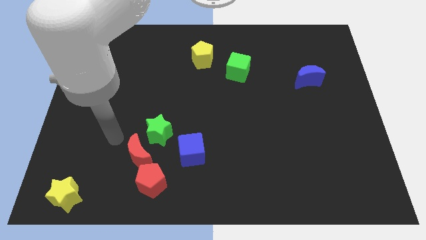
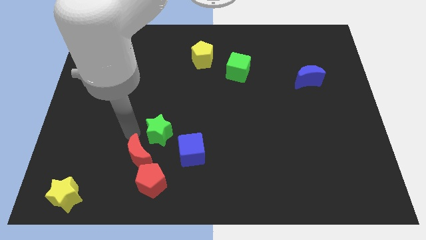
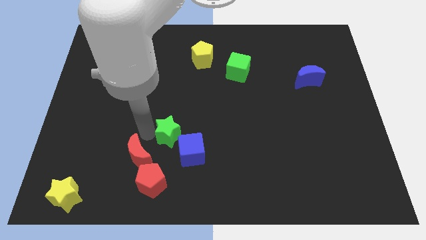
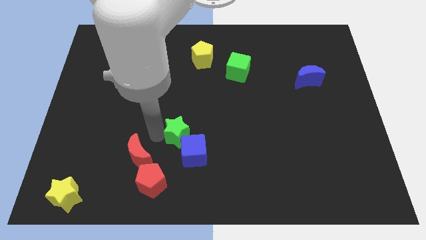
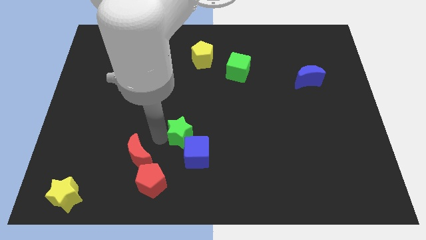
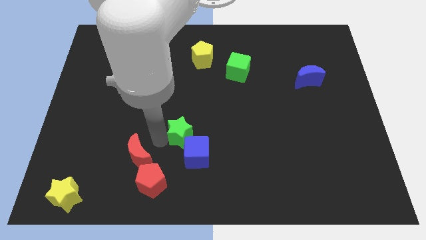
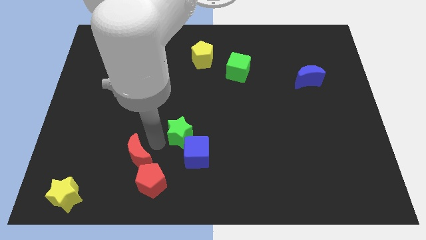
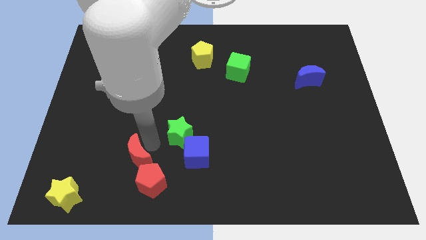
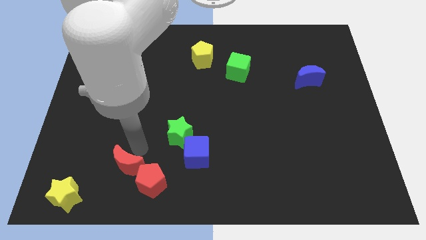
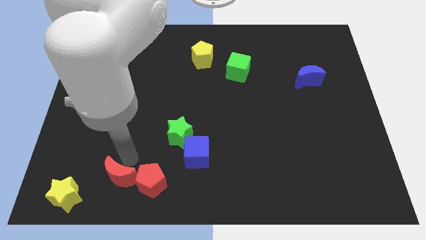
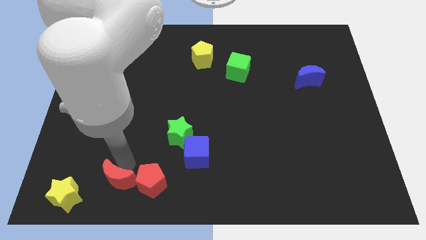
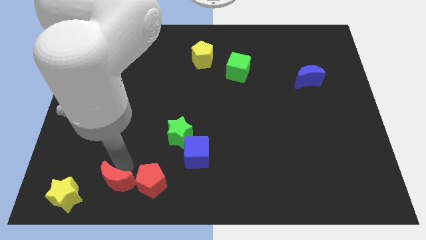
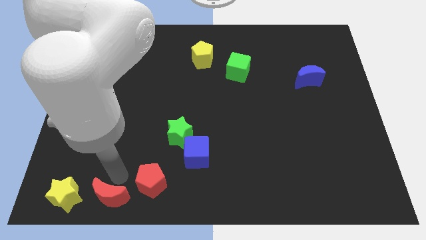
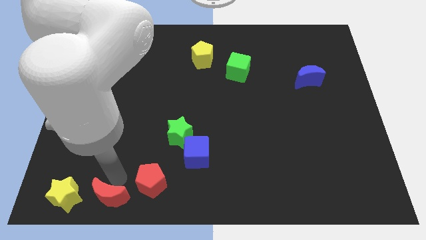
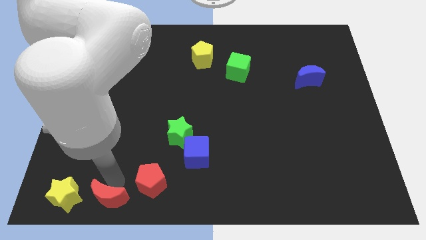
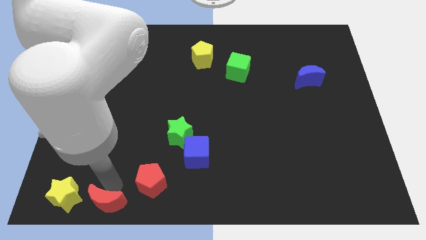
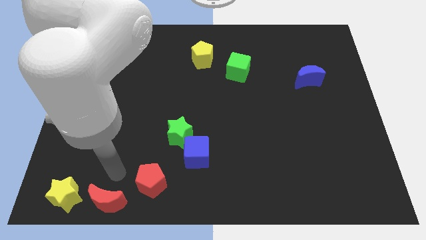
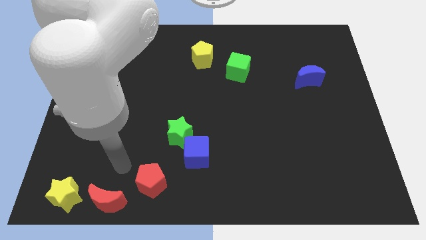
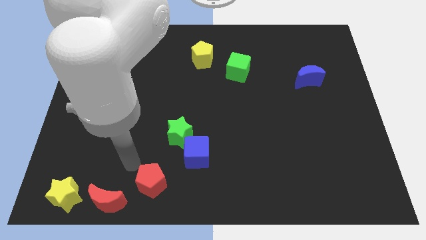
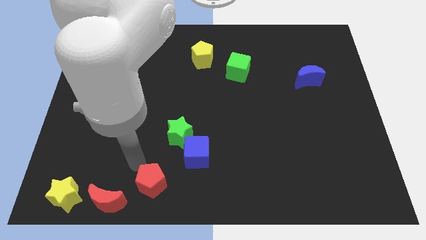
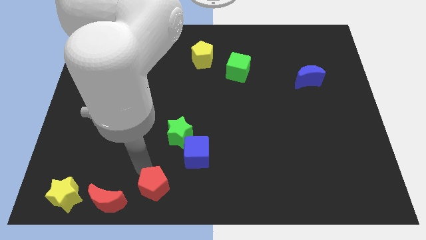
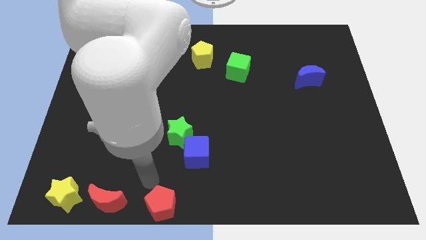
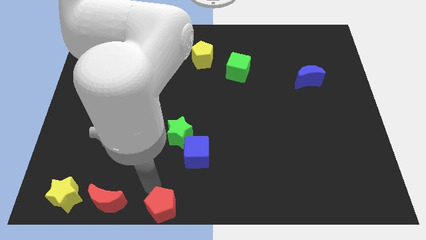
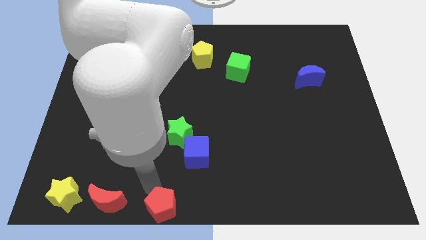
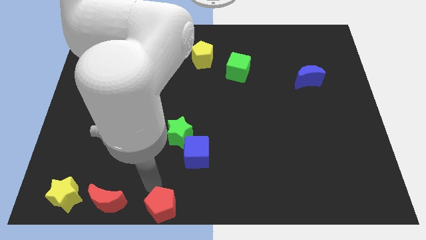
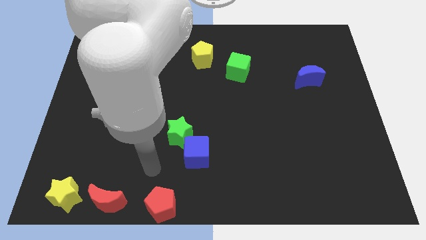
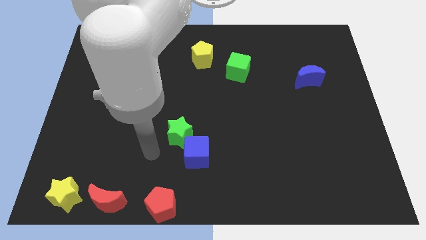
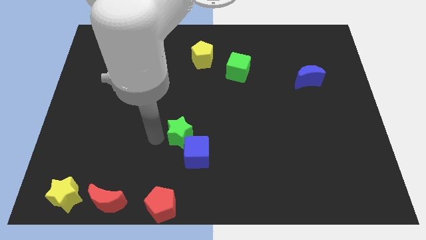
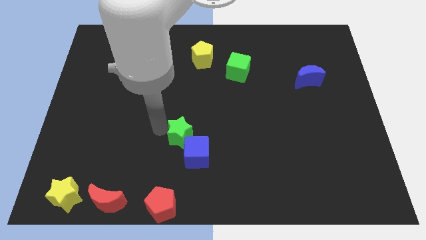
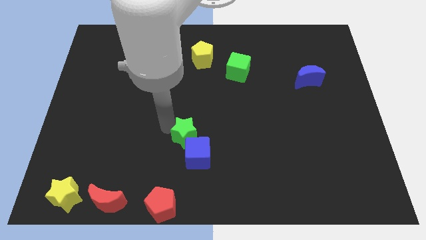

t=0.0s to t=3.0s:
arrange the yellow stared moon and red pentagon in a horizontal line at the bottom left side of the board

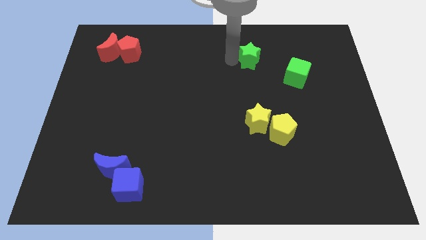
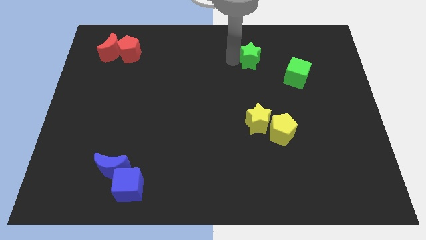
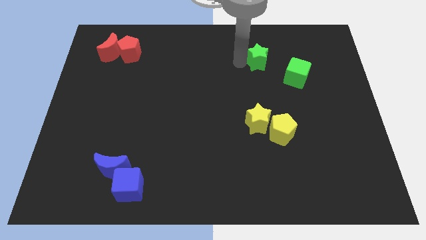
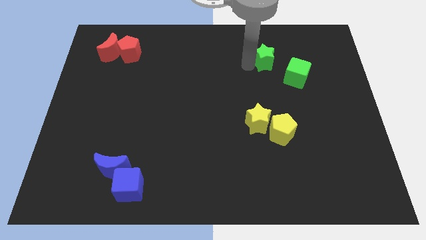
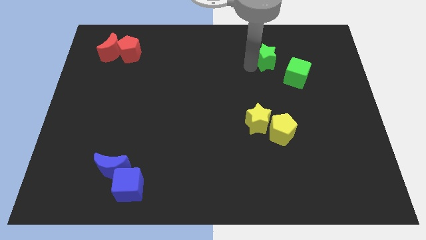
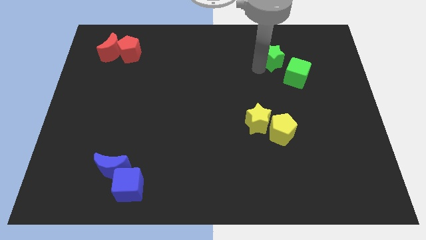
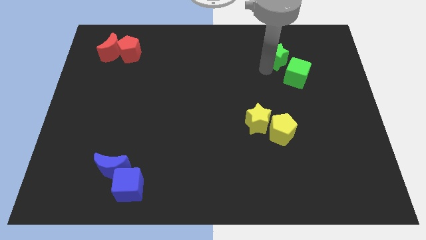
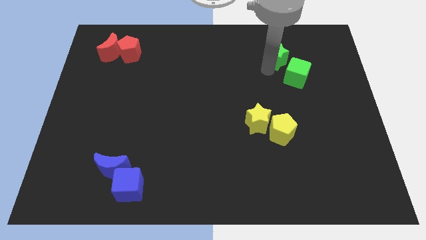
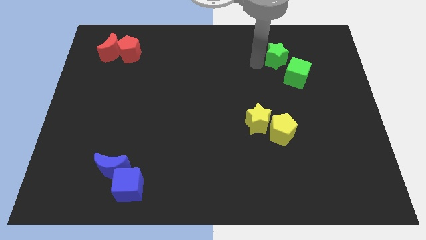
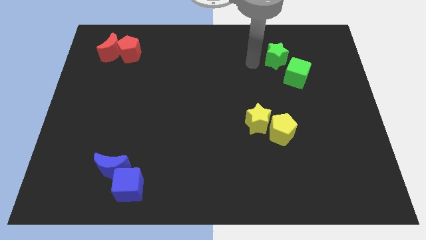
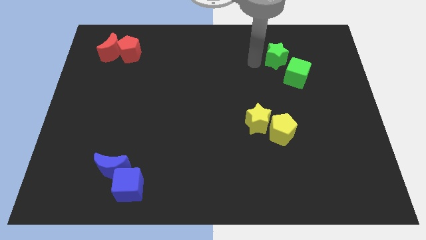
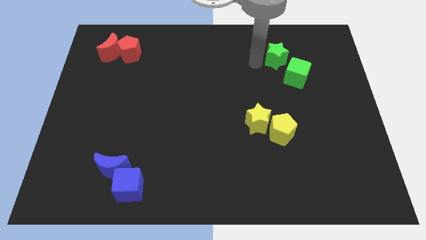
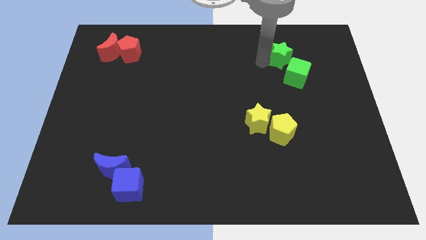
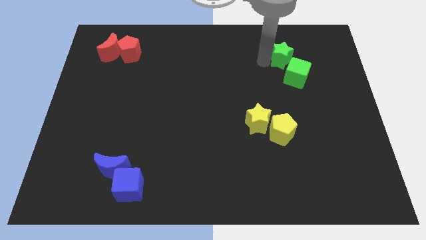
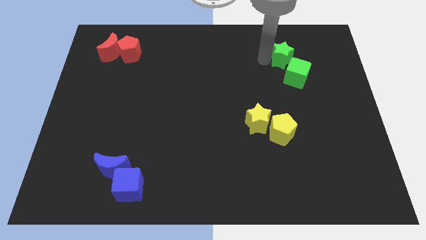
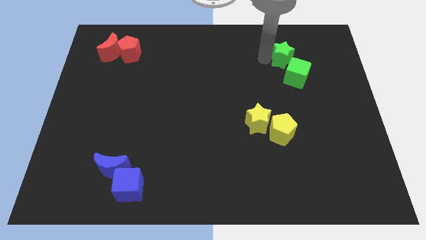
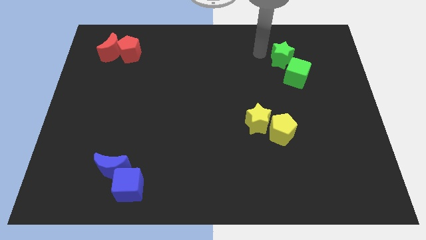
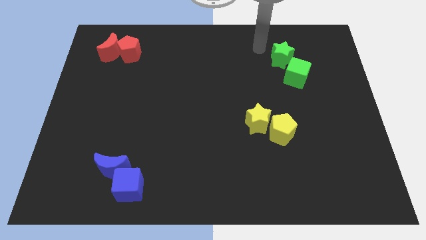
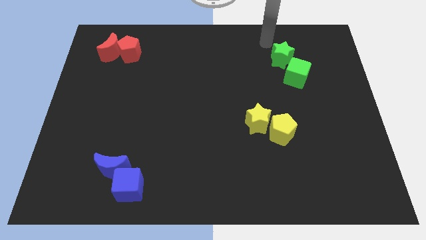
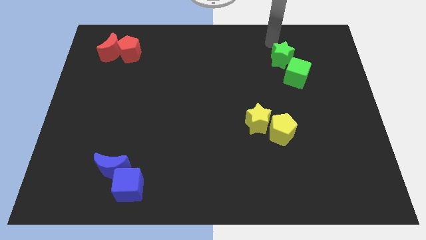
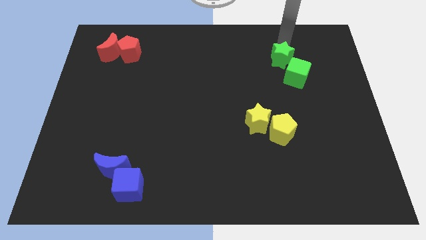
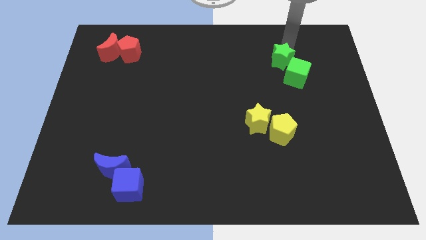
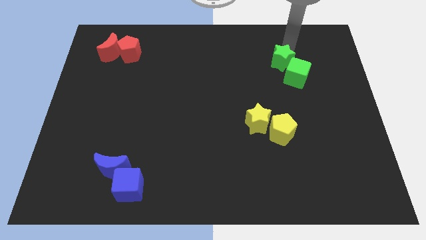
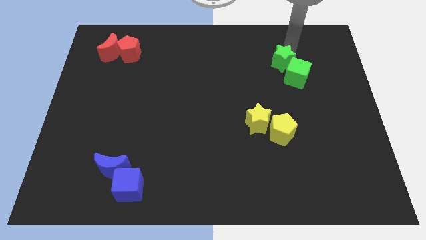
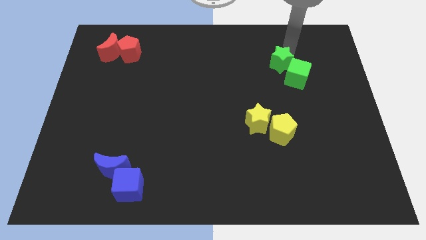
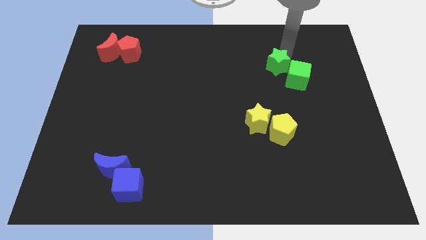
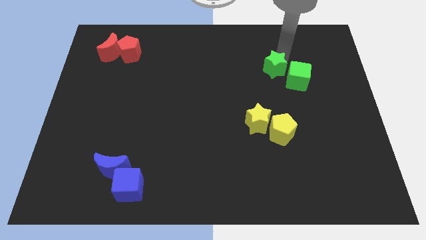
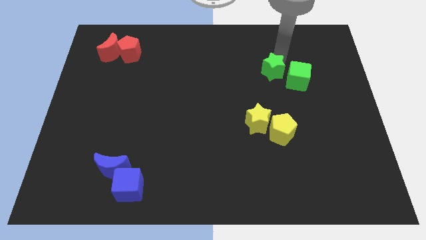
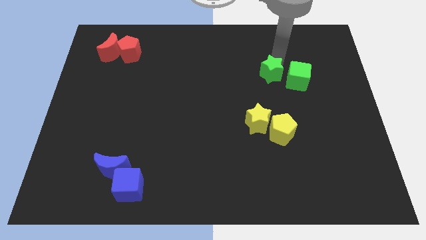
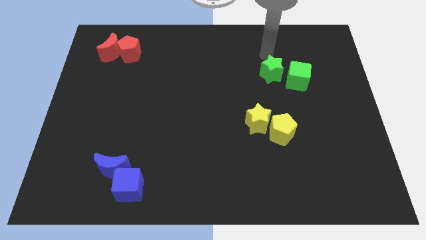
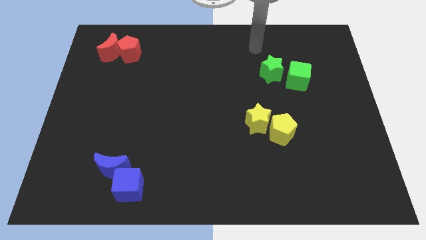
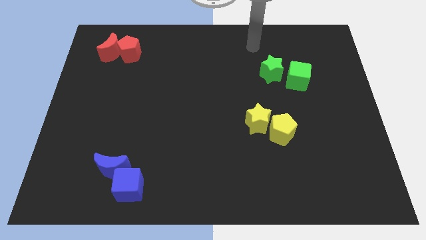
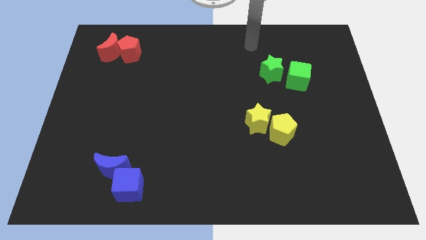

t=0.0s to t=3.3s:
move green star left beside the green cube

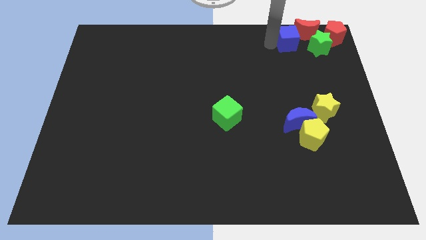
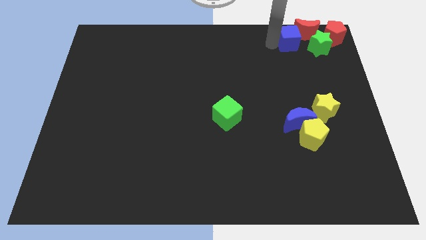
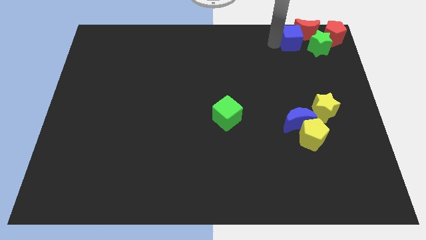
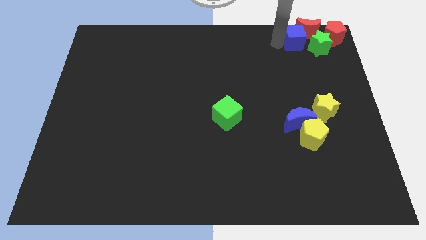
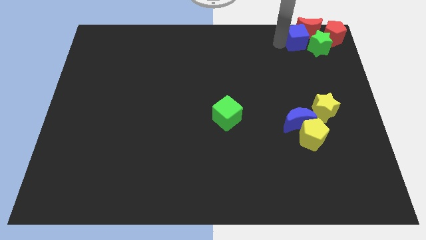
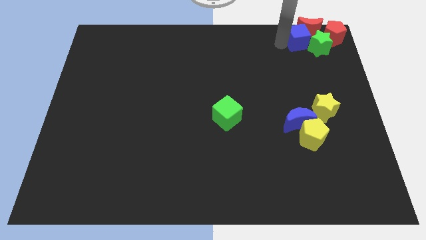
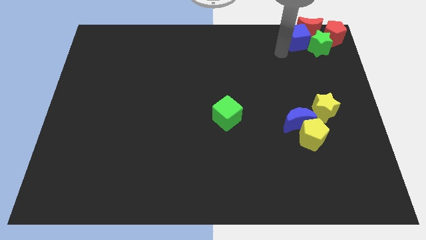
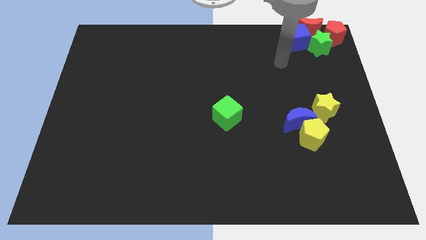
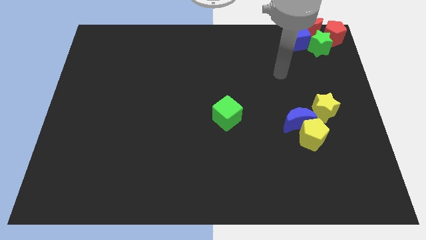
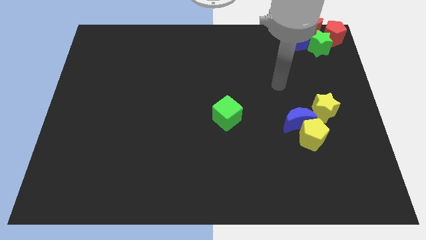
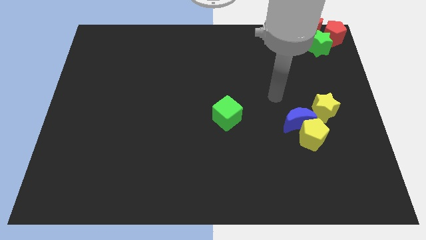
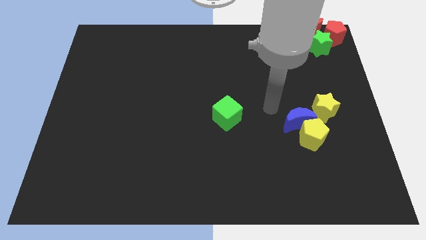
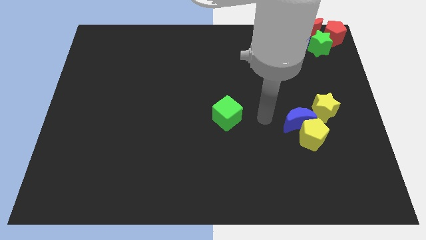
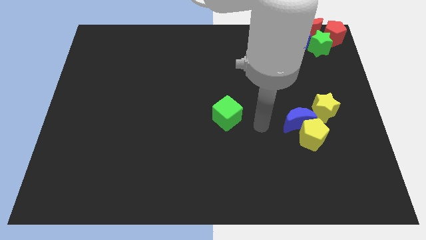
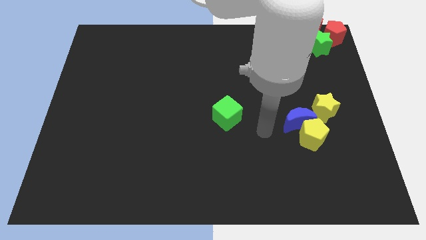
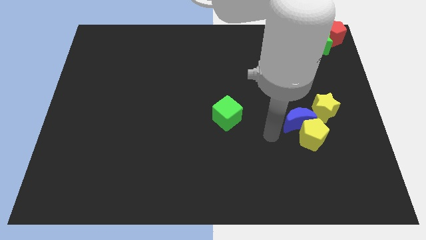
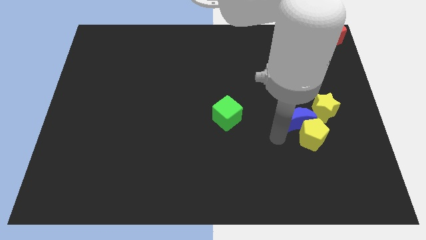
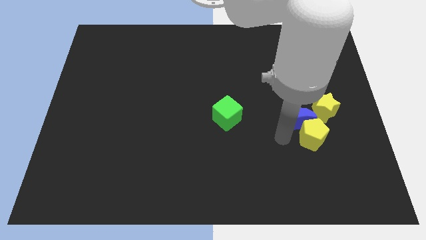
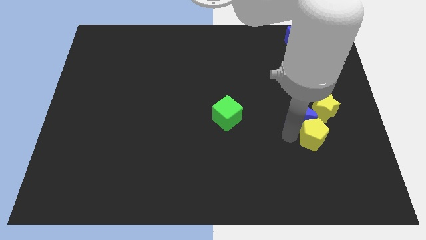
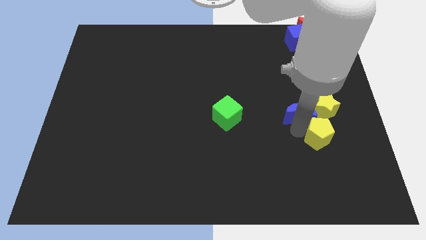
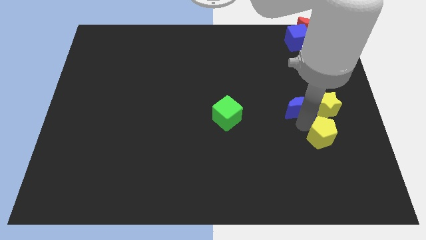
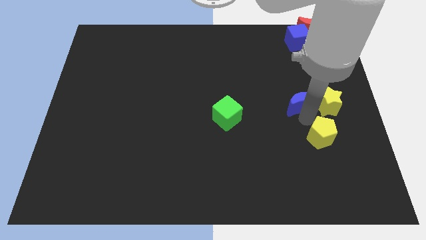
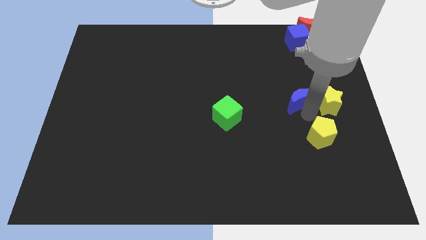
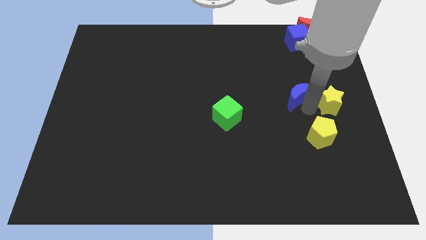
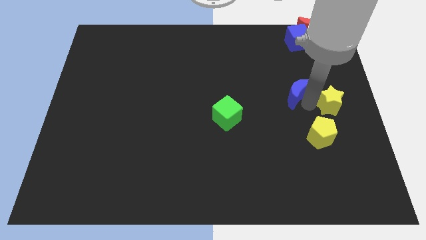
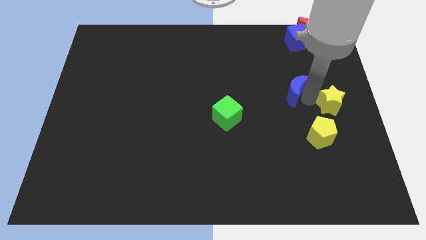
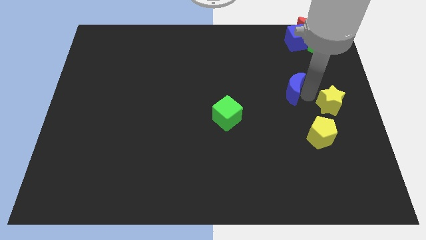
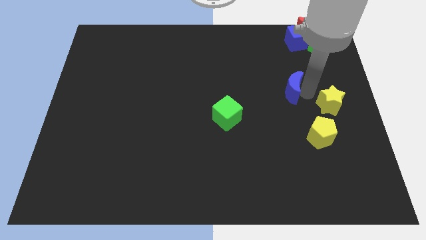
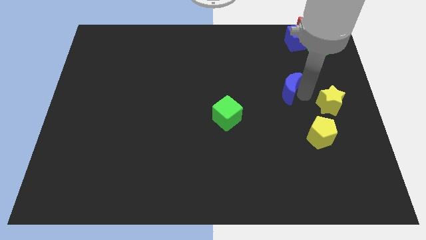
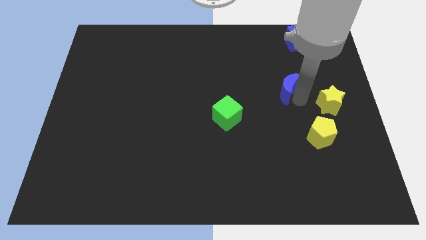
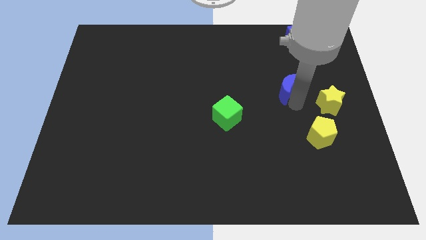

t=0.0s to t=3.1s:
separate blue crescent from the yellow blocks
